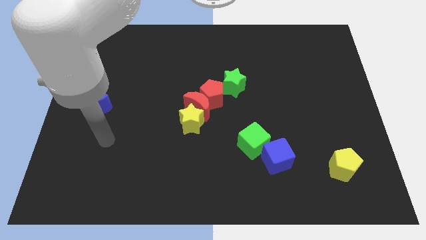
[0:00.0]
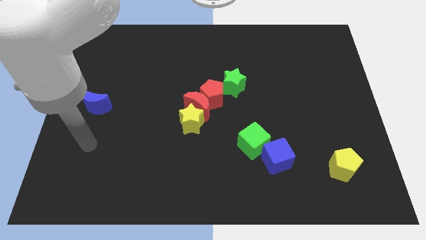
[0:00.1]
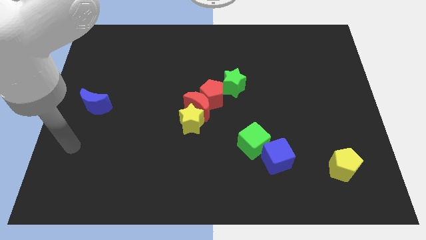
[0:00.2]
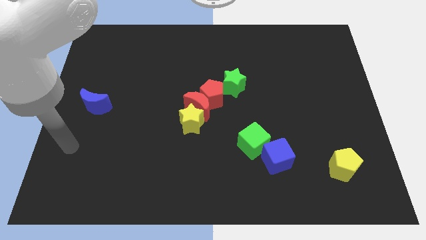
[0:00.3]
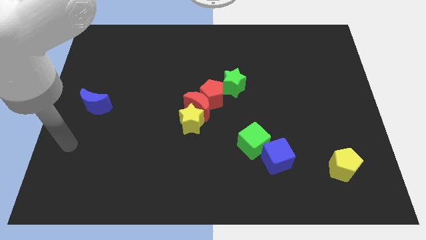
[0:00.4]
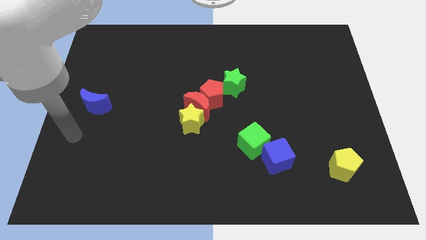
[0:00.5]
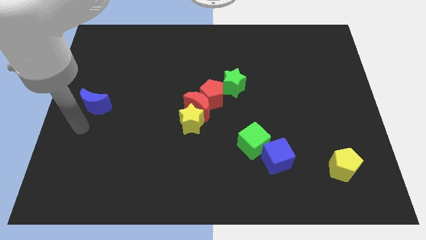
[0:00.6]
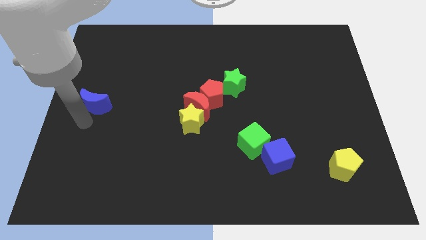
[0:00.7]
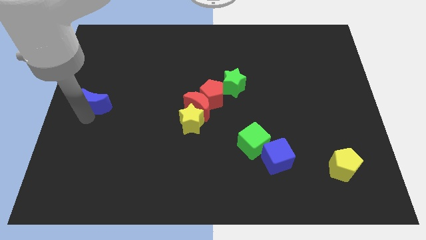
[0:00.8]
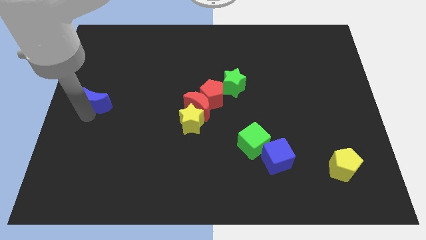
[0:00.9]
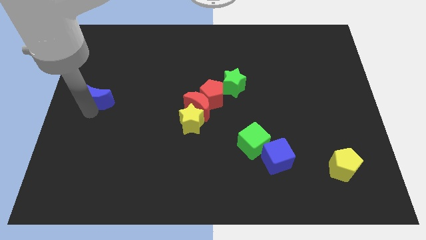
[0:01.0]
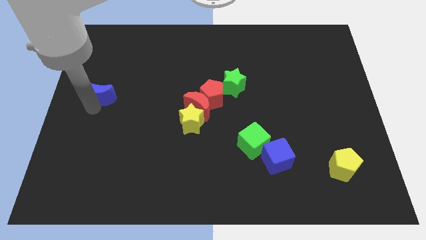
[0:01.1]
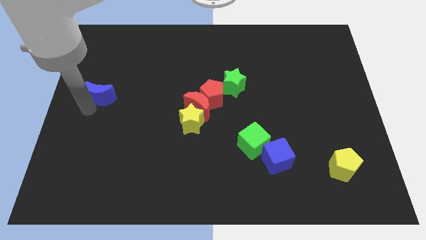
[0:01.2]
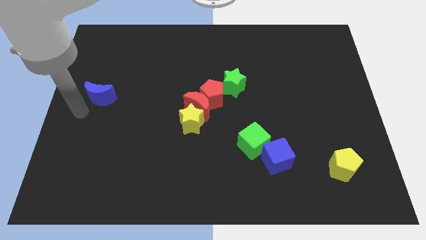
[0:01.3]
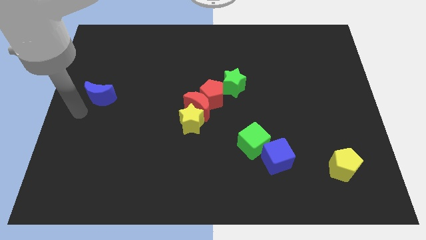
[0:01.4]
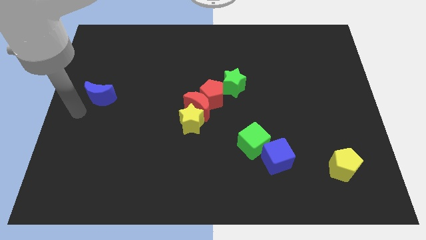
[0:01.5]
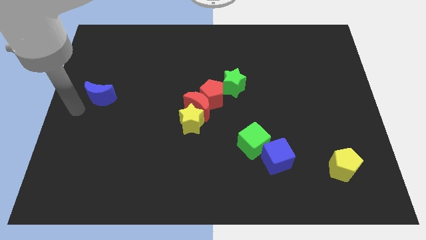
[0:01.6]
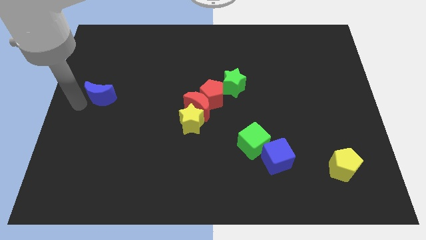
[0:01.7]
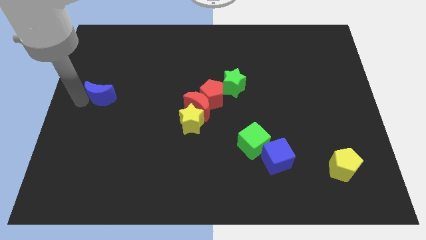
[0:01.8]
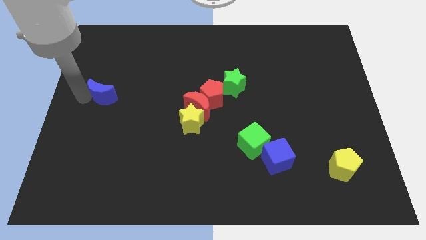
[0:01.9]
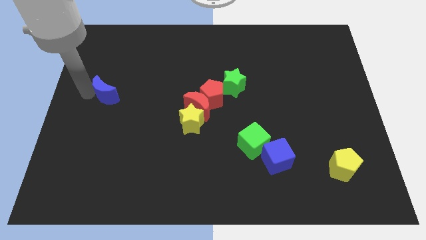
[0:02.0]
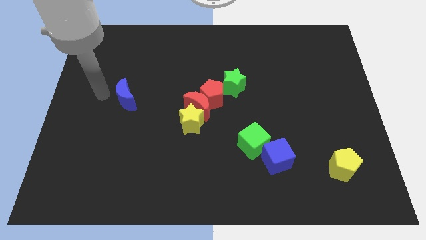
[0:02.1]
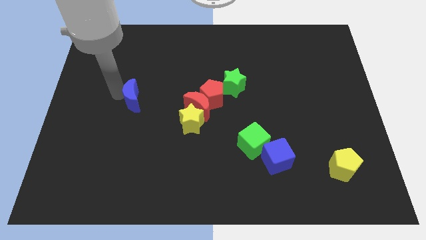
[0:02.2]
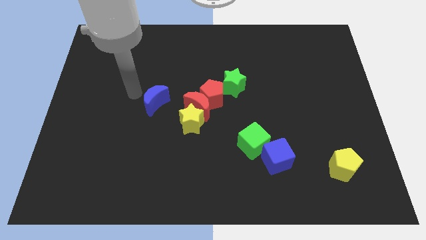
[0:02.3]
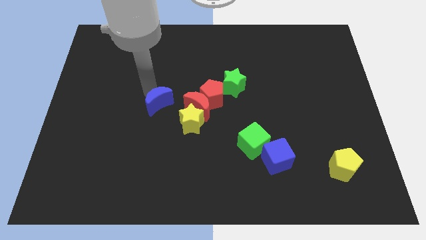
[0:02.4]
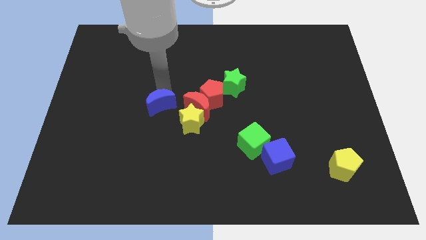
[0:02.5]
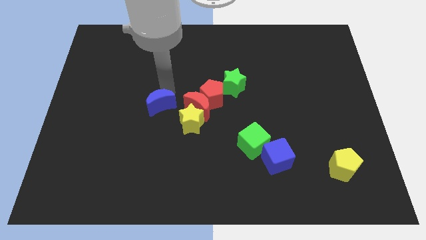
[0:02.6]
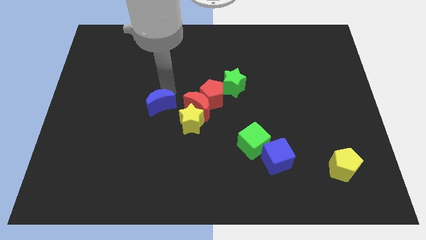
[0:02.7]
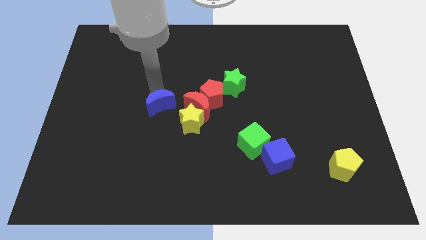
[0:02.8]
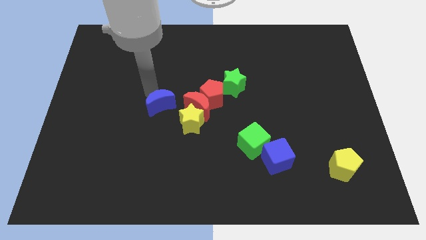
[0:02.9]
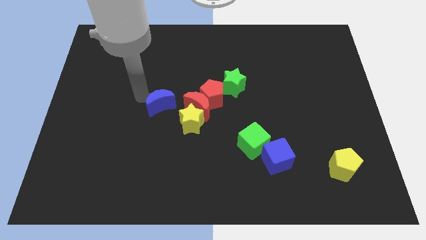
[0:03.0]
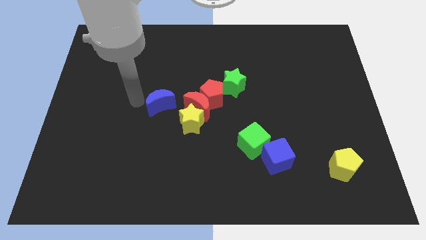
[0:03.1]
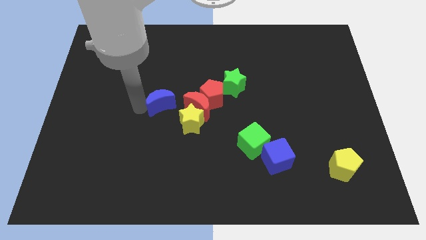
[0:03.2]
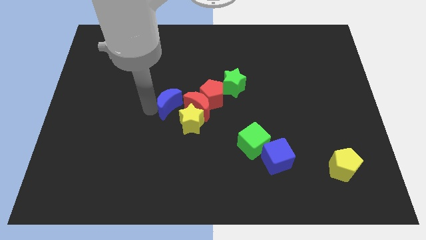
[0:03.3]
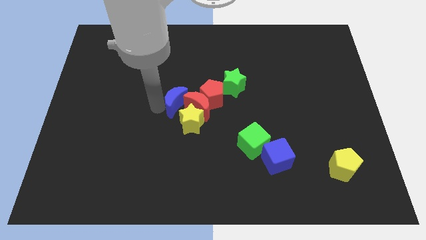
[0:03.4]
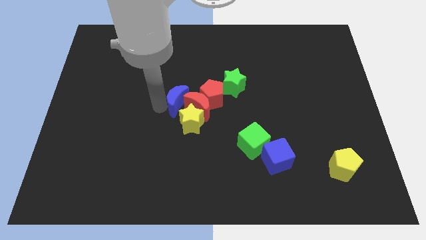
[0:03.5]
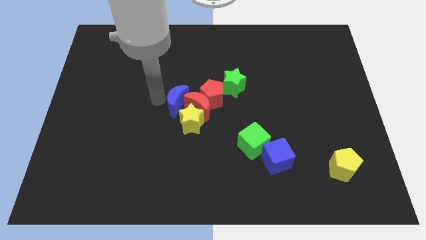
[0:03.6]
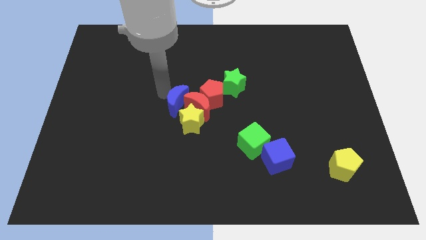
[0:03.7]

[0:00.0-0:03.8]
slide the blue moon into the red moon

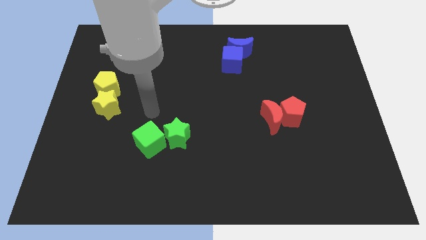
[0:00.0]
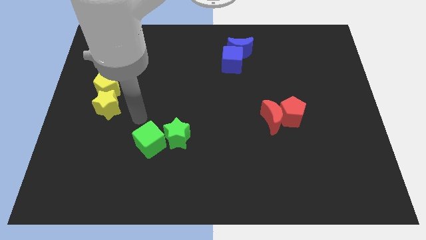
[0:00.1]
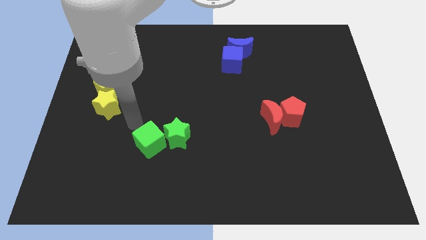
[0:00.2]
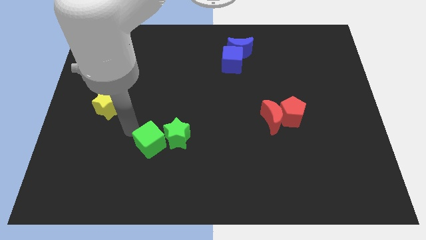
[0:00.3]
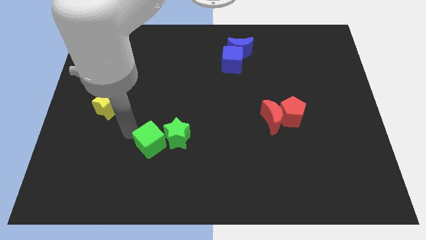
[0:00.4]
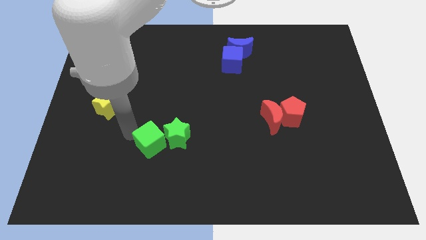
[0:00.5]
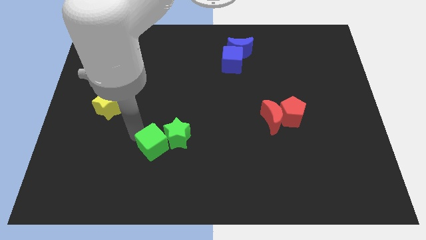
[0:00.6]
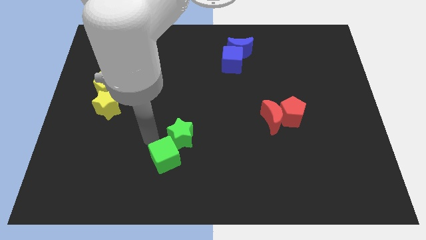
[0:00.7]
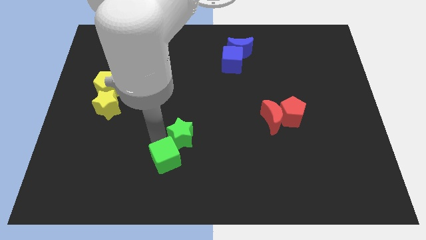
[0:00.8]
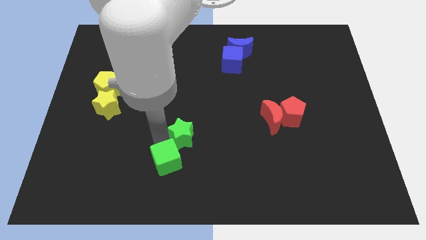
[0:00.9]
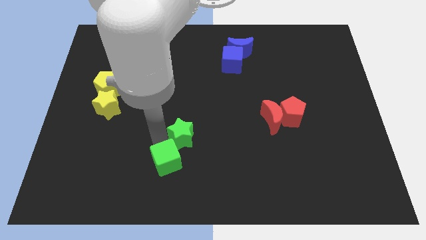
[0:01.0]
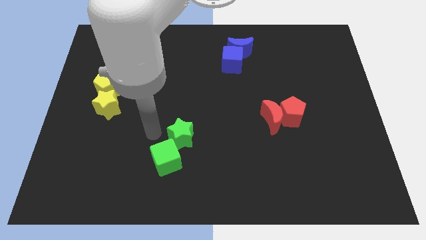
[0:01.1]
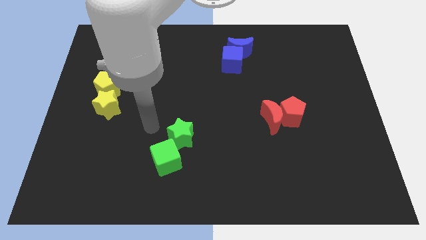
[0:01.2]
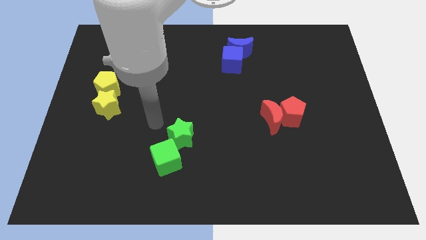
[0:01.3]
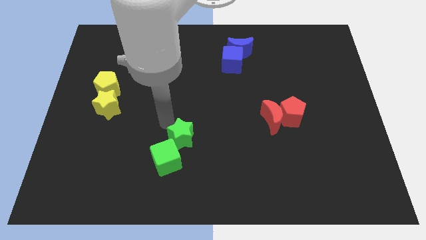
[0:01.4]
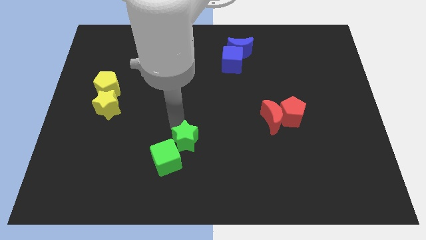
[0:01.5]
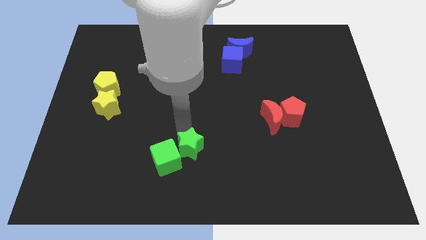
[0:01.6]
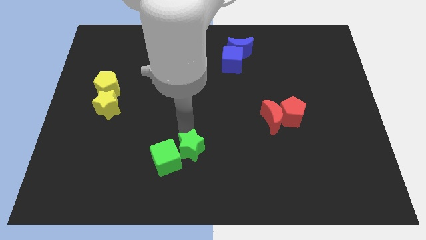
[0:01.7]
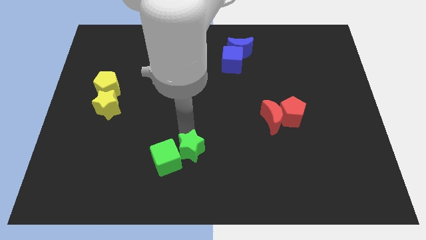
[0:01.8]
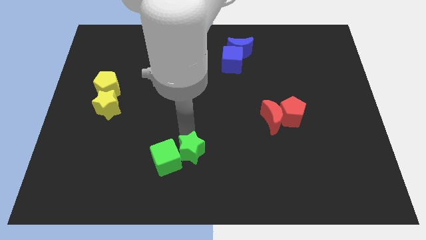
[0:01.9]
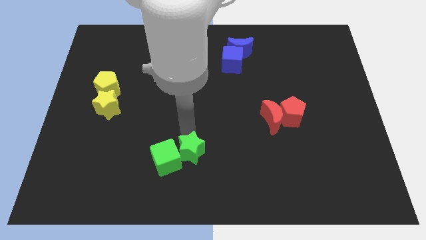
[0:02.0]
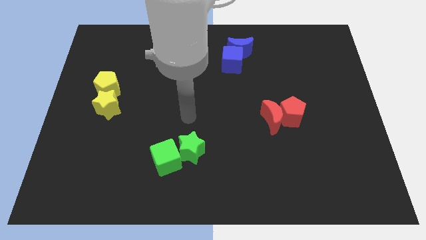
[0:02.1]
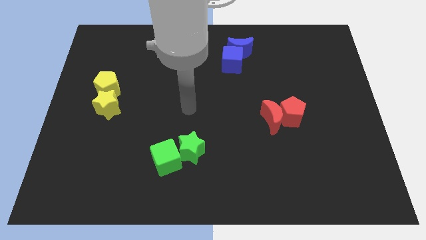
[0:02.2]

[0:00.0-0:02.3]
move the green cube and the green star to the bottom center of the board

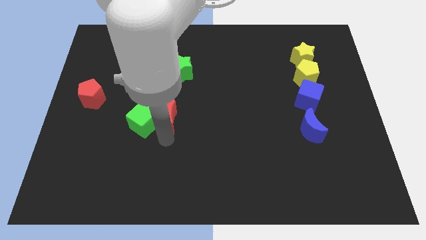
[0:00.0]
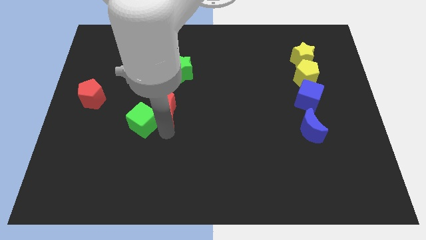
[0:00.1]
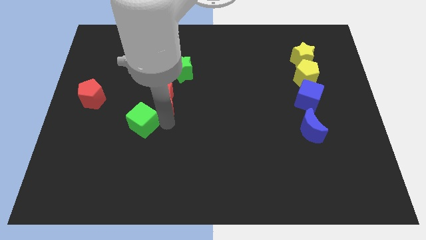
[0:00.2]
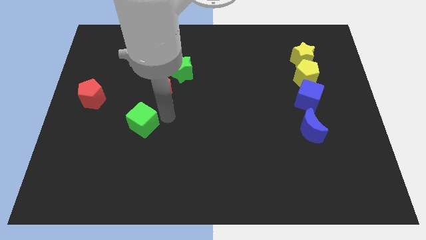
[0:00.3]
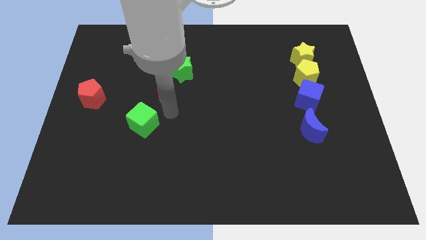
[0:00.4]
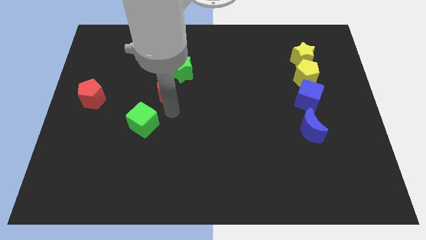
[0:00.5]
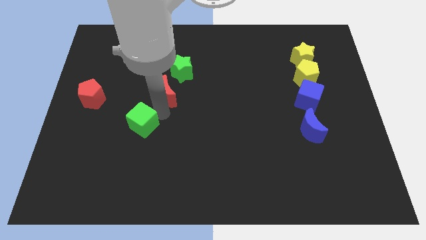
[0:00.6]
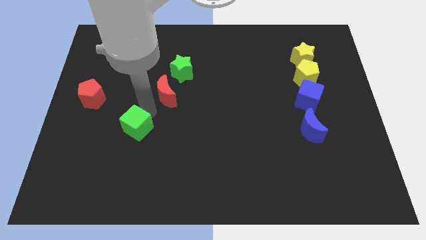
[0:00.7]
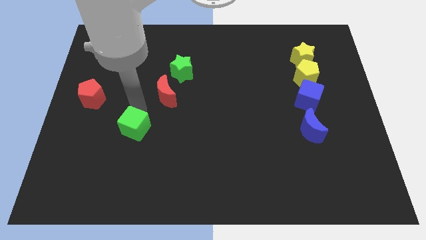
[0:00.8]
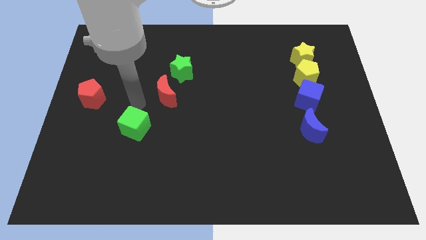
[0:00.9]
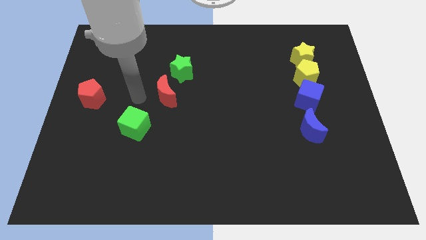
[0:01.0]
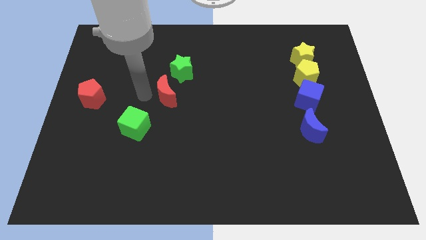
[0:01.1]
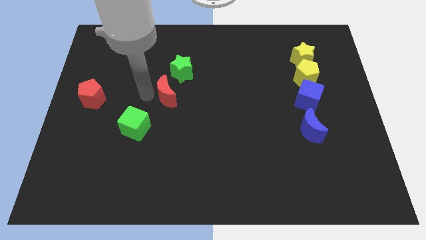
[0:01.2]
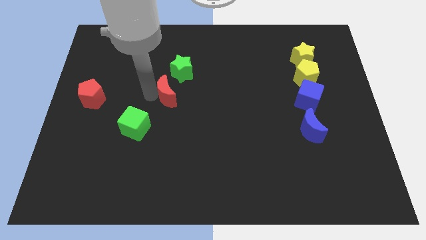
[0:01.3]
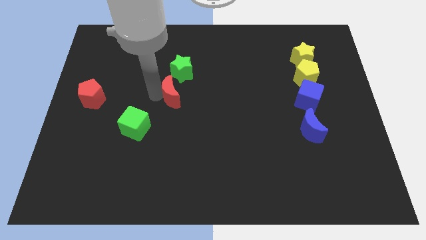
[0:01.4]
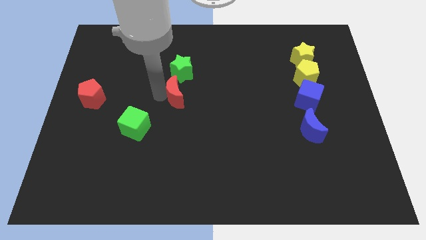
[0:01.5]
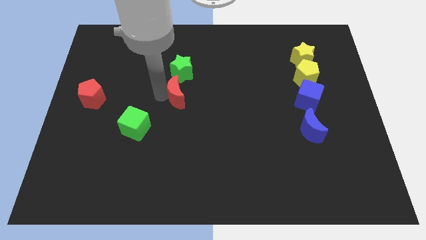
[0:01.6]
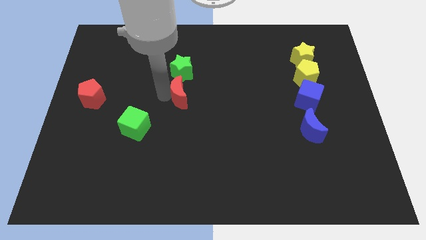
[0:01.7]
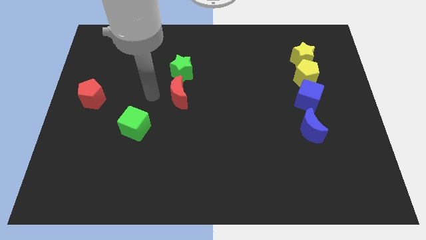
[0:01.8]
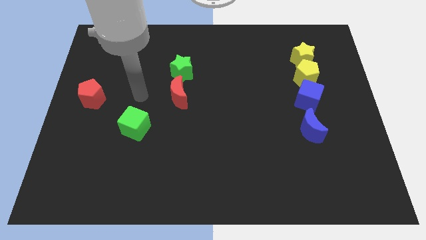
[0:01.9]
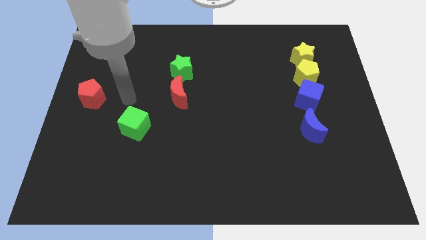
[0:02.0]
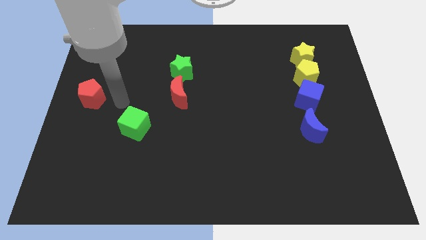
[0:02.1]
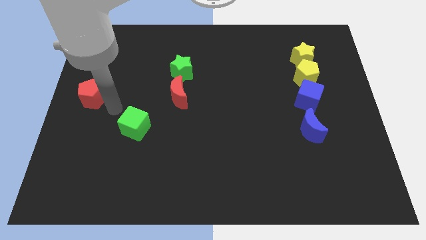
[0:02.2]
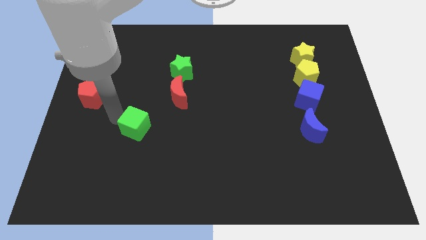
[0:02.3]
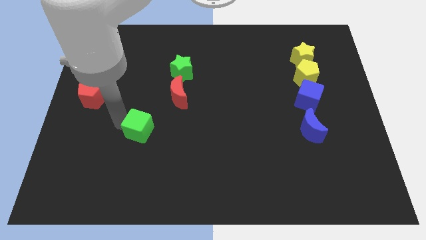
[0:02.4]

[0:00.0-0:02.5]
drag the red crescent and place it below the green star

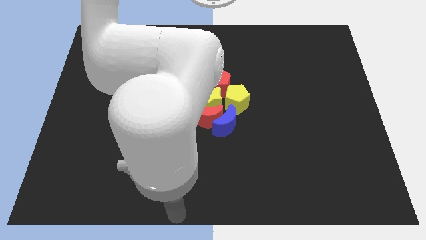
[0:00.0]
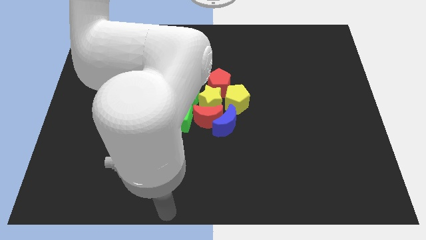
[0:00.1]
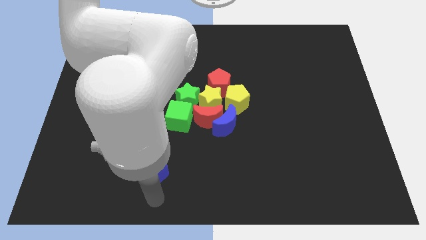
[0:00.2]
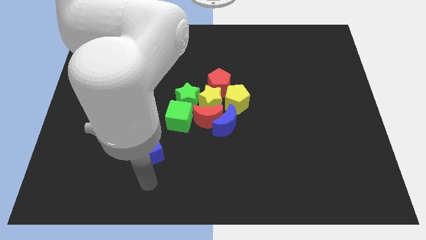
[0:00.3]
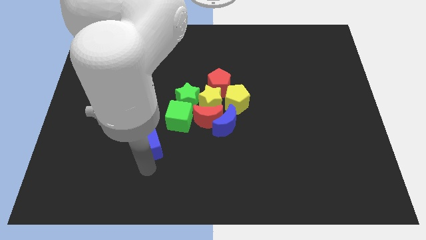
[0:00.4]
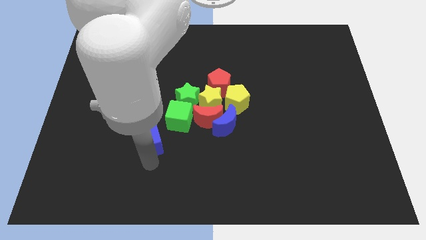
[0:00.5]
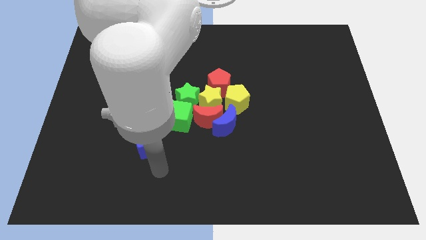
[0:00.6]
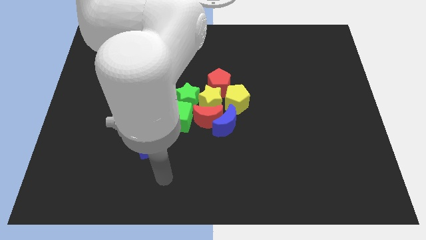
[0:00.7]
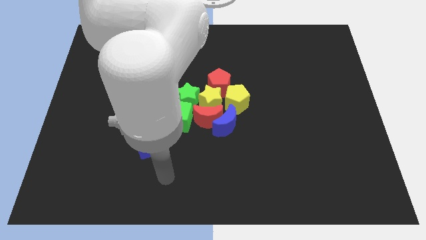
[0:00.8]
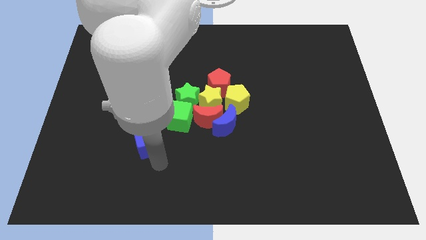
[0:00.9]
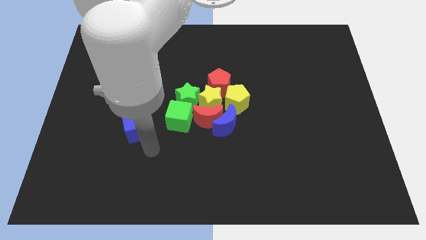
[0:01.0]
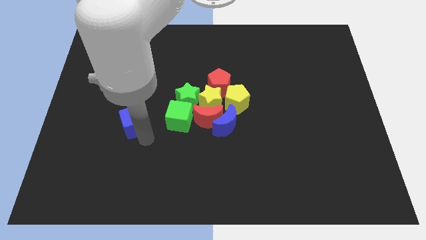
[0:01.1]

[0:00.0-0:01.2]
push the blue cube to the top of the board
